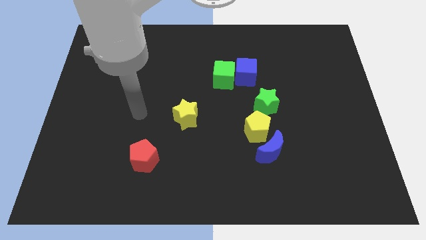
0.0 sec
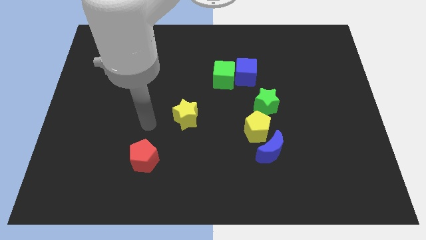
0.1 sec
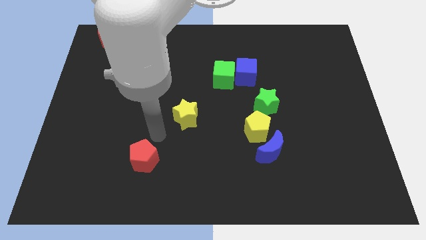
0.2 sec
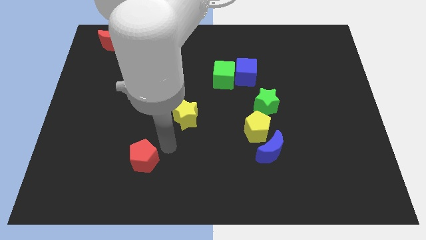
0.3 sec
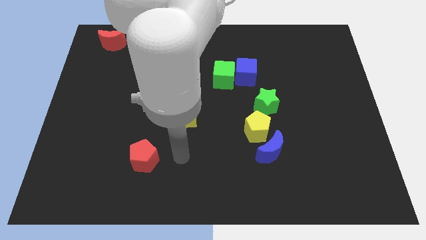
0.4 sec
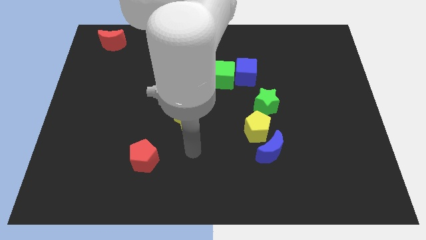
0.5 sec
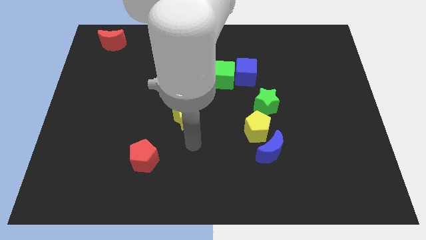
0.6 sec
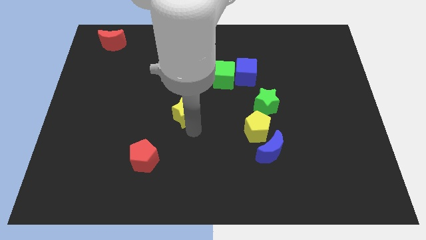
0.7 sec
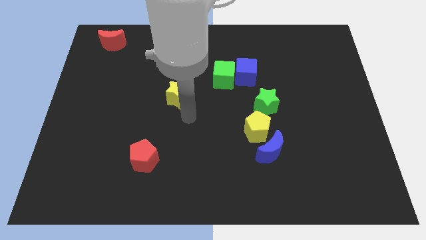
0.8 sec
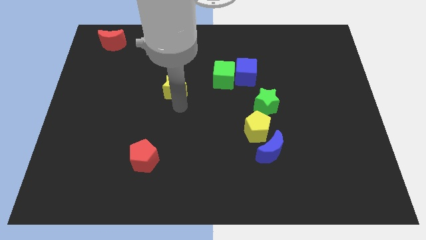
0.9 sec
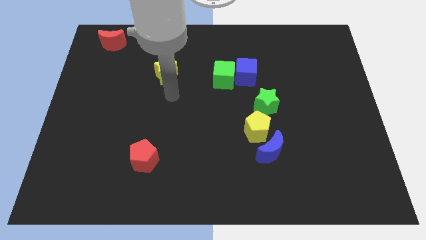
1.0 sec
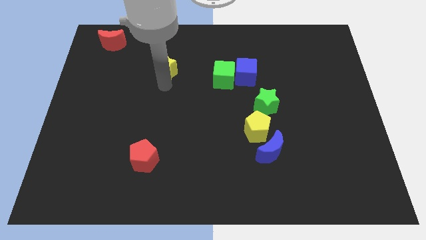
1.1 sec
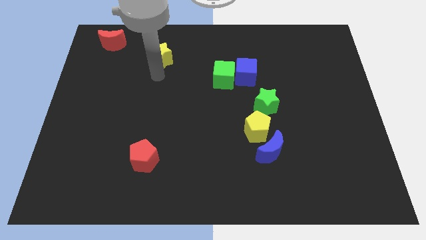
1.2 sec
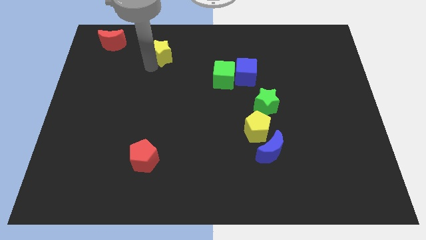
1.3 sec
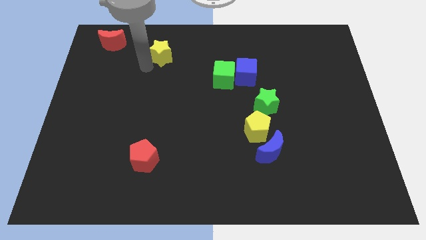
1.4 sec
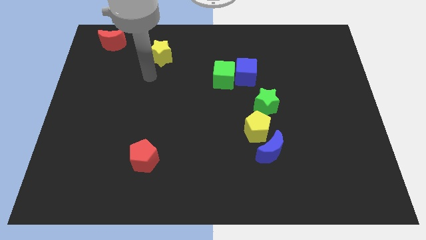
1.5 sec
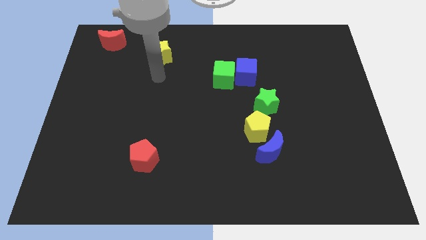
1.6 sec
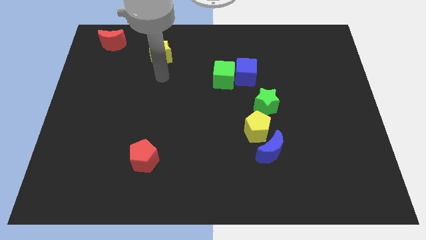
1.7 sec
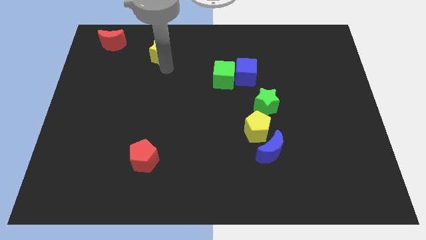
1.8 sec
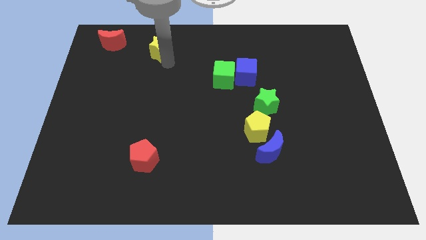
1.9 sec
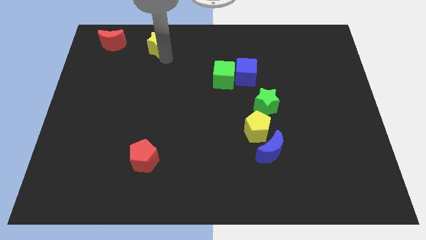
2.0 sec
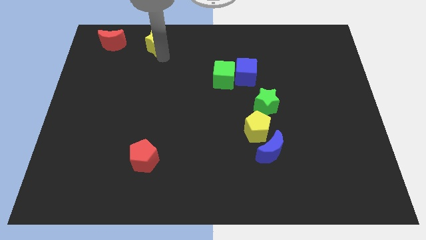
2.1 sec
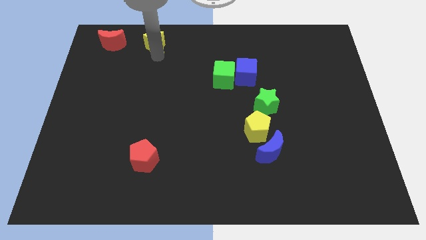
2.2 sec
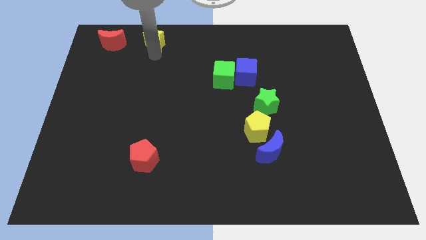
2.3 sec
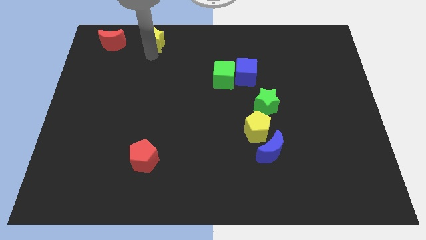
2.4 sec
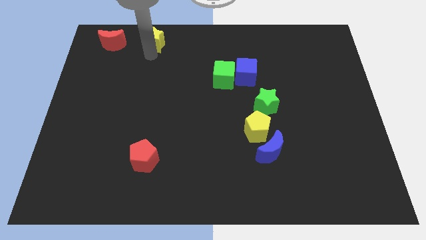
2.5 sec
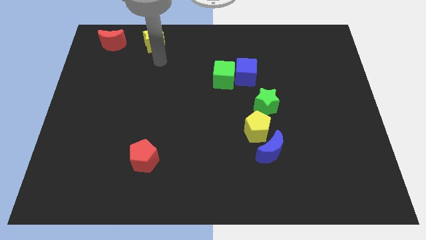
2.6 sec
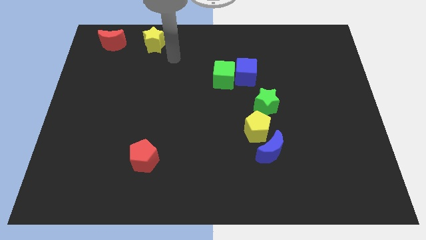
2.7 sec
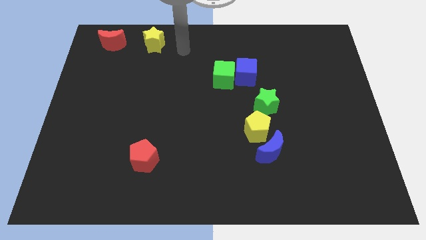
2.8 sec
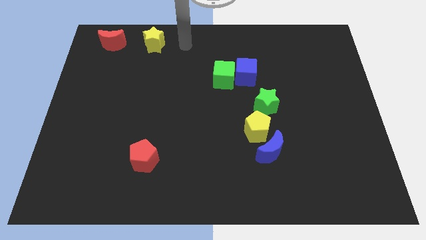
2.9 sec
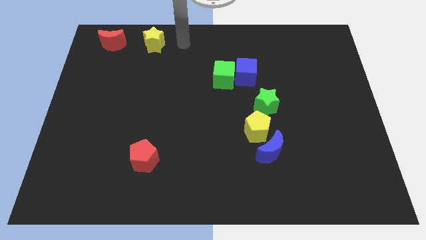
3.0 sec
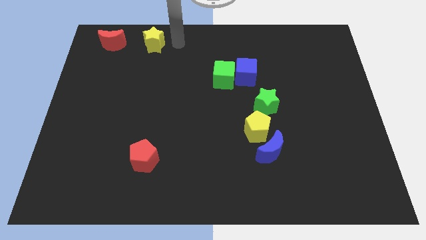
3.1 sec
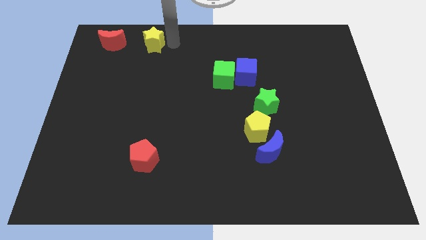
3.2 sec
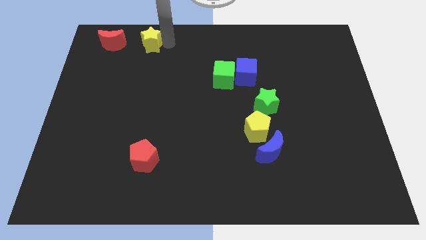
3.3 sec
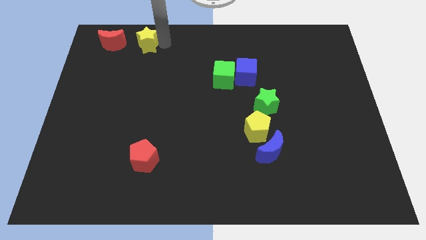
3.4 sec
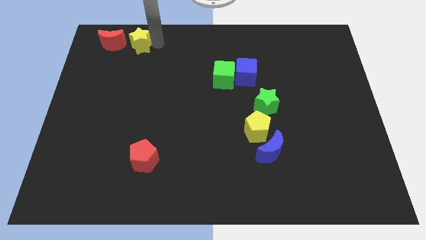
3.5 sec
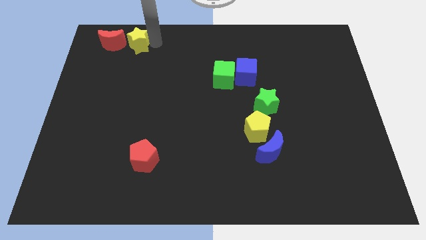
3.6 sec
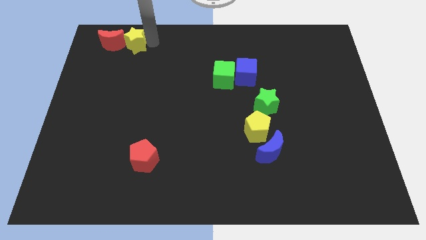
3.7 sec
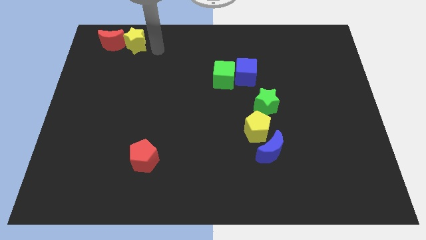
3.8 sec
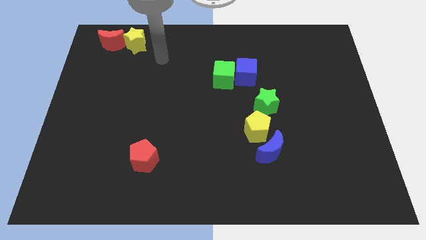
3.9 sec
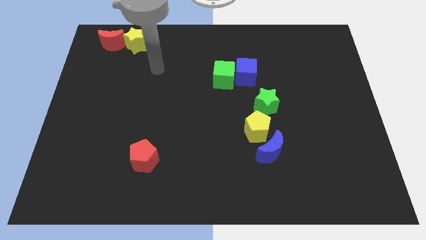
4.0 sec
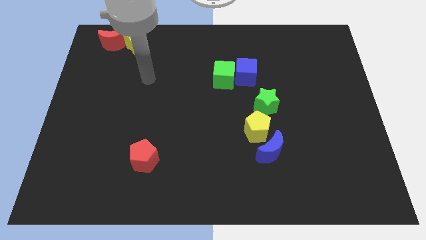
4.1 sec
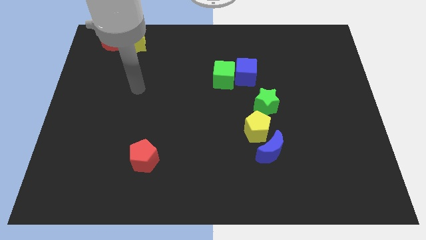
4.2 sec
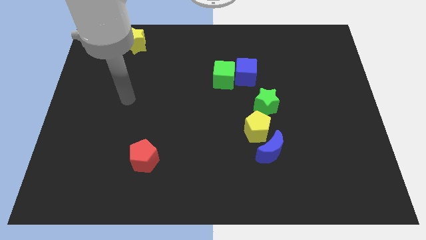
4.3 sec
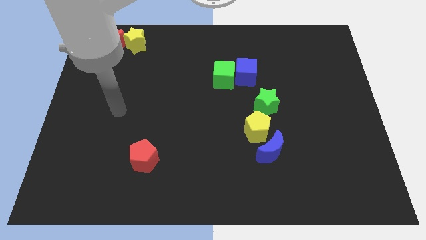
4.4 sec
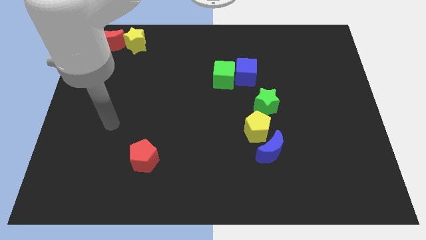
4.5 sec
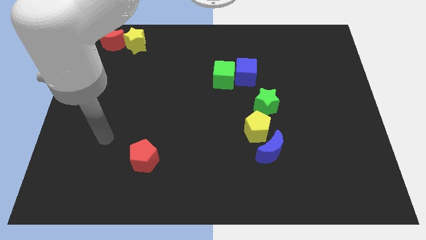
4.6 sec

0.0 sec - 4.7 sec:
push yellow star to the right of red moon

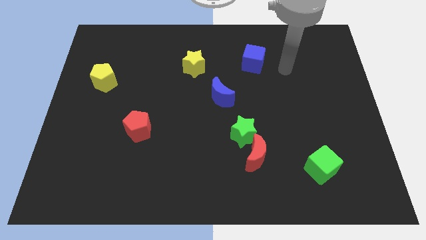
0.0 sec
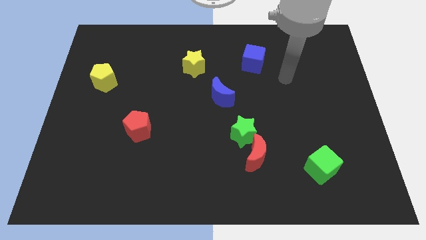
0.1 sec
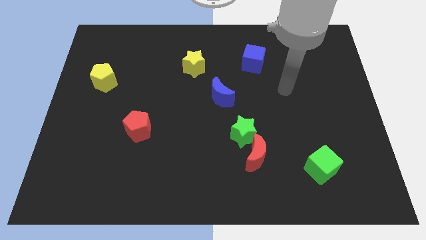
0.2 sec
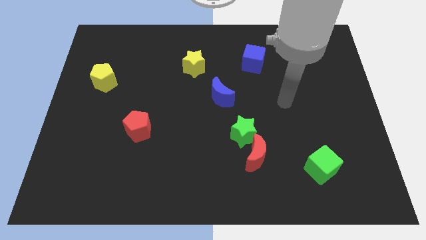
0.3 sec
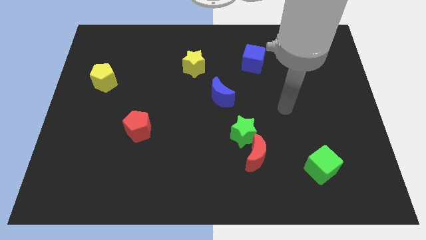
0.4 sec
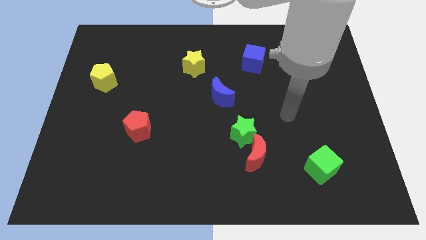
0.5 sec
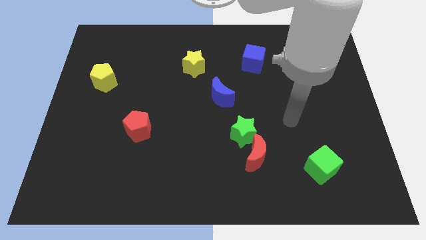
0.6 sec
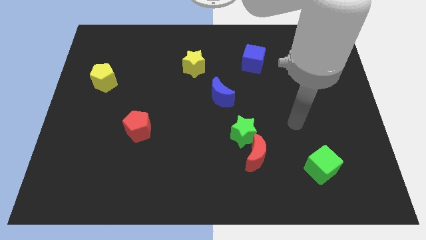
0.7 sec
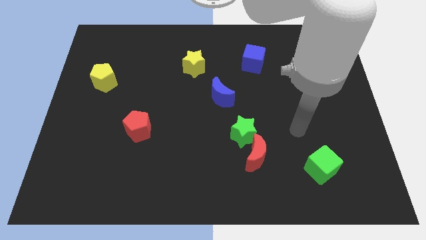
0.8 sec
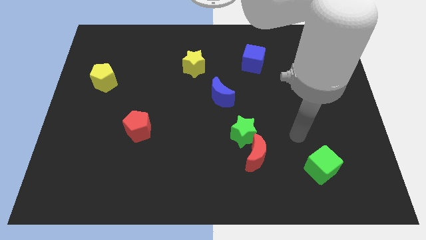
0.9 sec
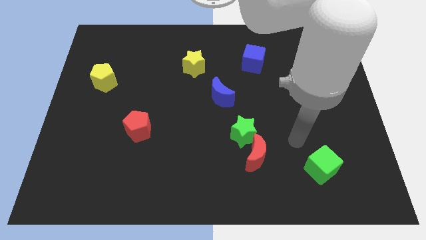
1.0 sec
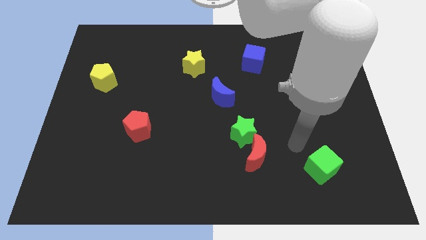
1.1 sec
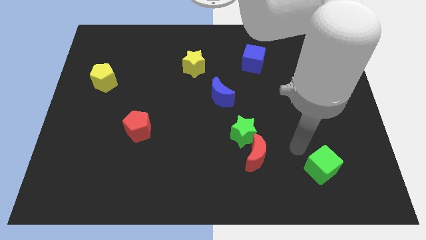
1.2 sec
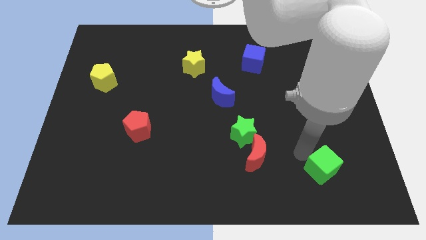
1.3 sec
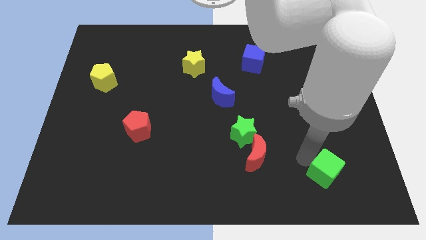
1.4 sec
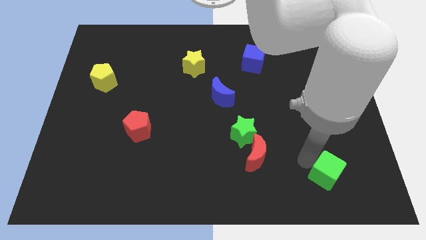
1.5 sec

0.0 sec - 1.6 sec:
move your arm near the green cube

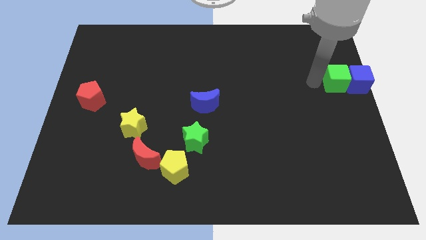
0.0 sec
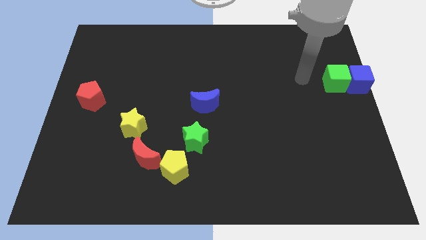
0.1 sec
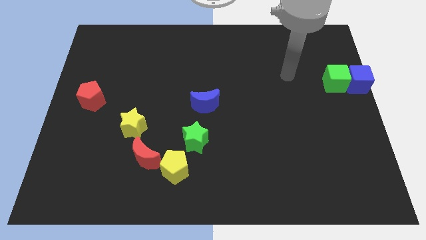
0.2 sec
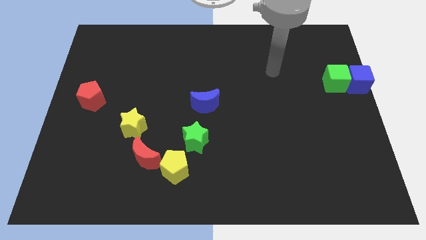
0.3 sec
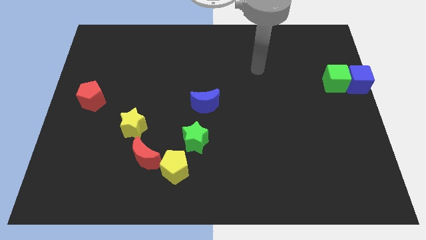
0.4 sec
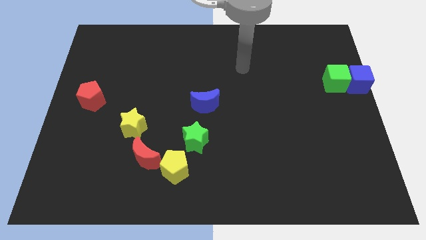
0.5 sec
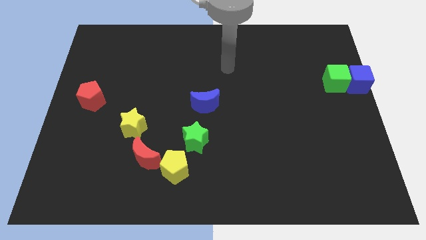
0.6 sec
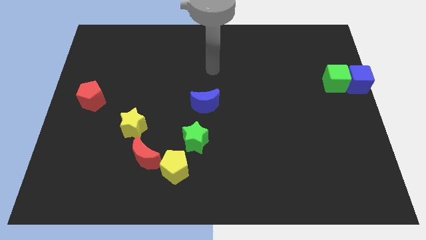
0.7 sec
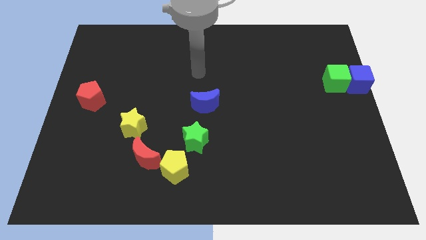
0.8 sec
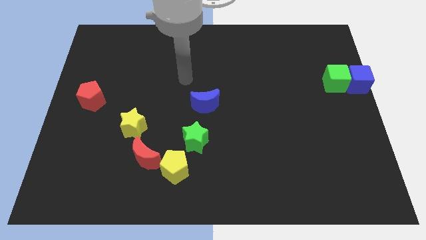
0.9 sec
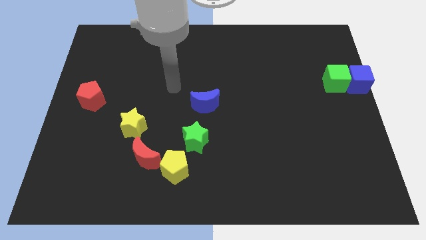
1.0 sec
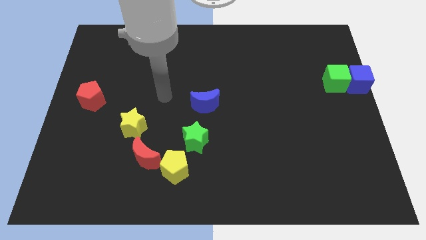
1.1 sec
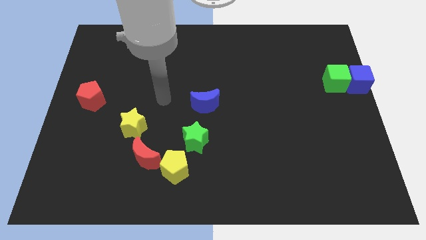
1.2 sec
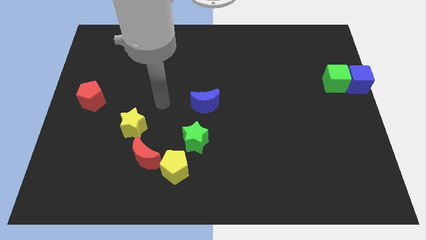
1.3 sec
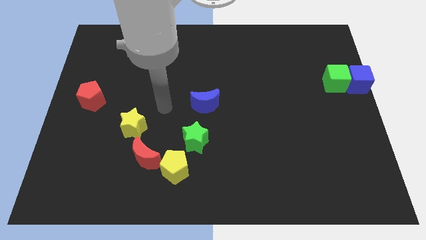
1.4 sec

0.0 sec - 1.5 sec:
point your arm at the left of the blue crescent

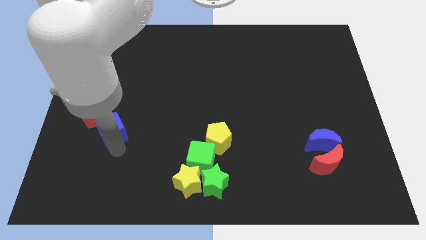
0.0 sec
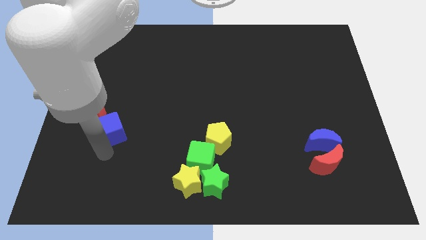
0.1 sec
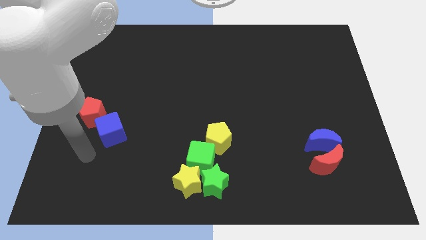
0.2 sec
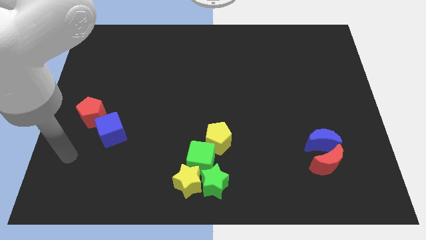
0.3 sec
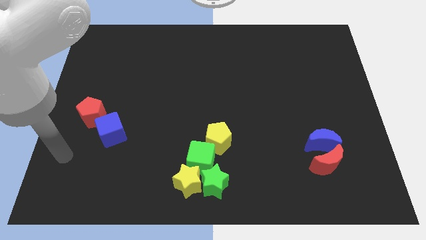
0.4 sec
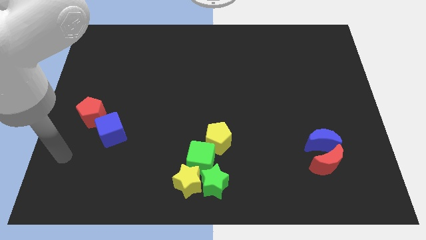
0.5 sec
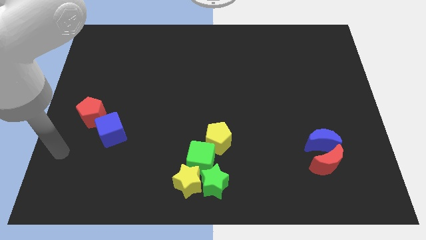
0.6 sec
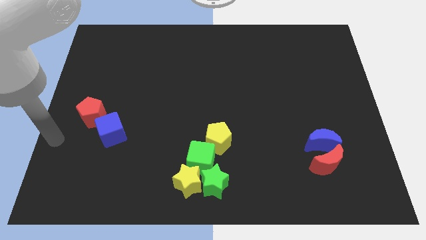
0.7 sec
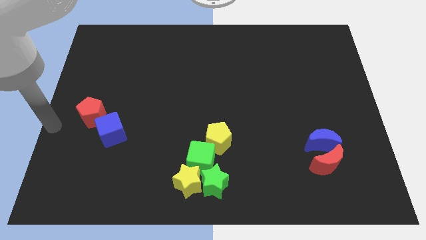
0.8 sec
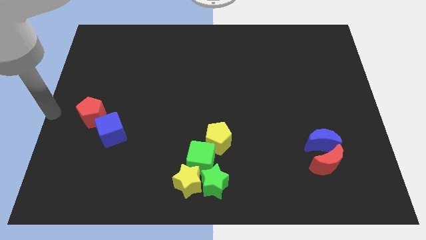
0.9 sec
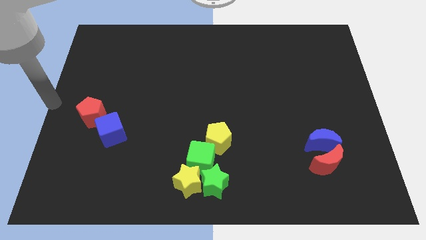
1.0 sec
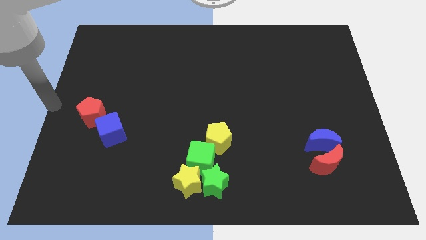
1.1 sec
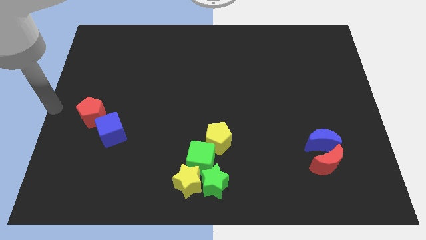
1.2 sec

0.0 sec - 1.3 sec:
point your arm at the center left of the board
